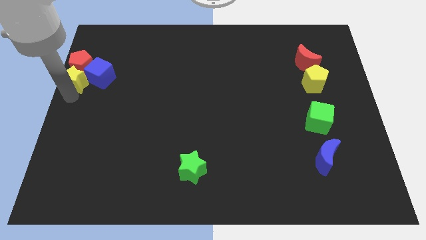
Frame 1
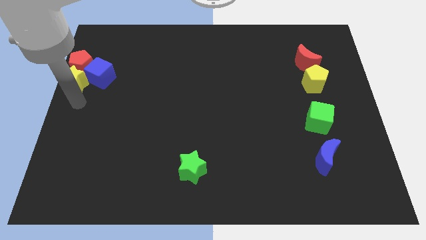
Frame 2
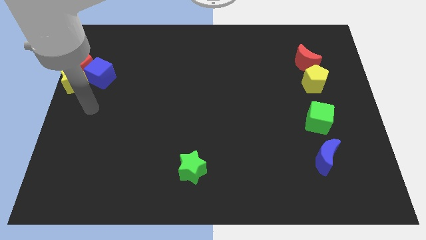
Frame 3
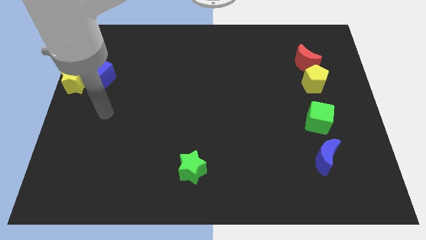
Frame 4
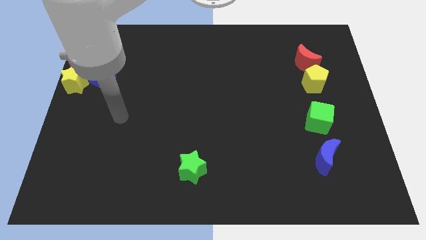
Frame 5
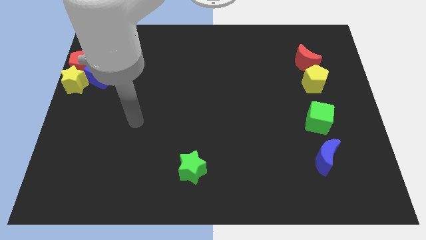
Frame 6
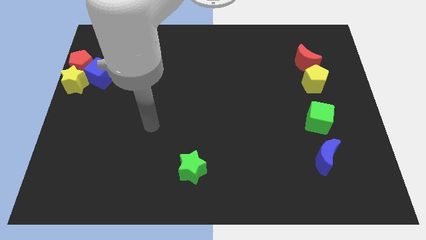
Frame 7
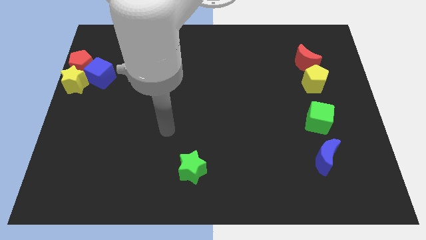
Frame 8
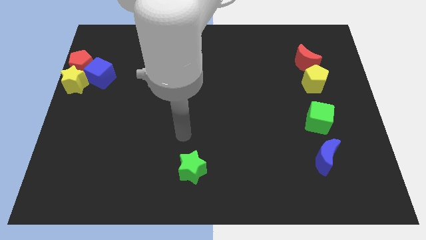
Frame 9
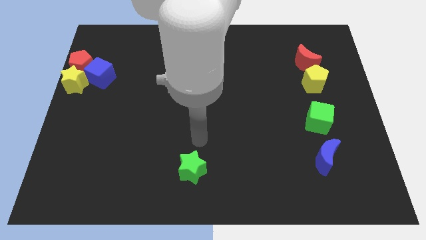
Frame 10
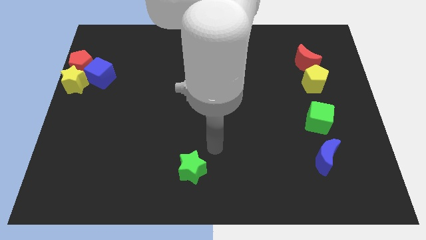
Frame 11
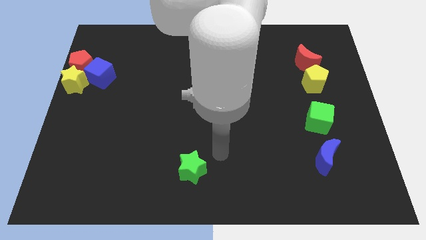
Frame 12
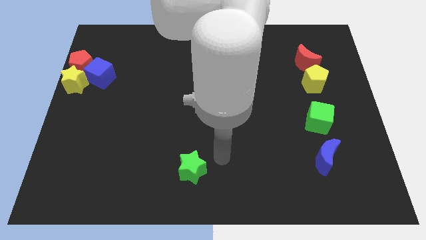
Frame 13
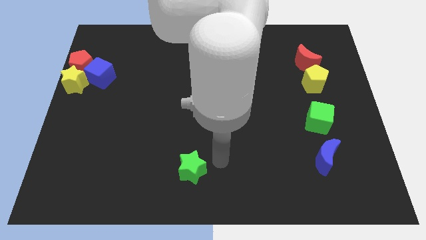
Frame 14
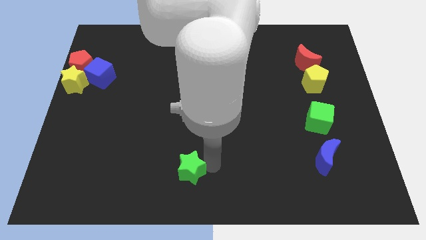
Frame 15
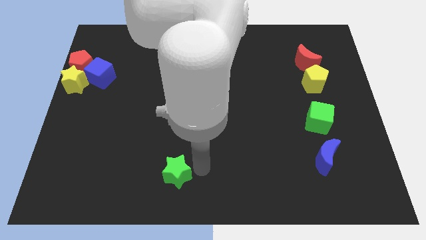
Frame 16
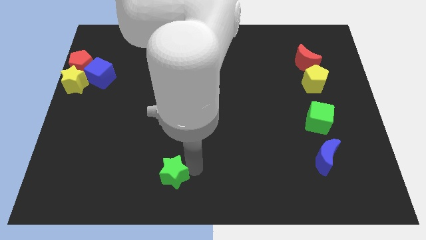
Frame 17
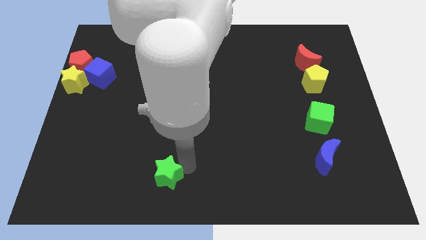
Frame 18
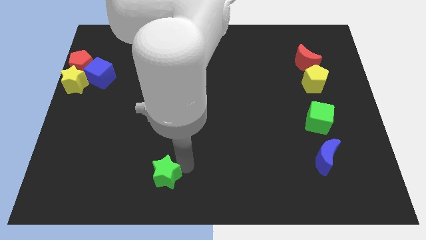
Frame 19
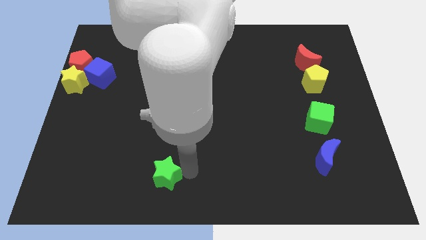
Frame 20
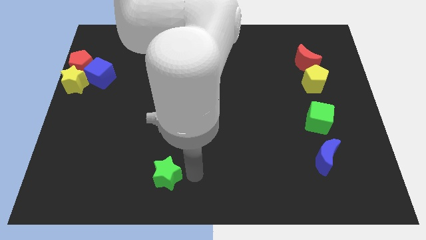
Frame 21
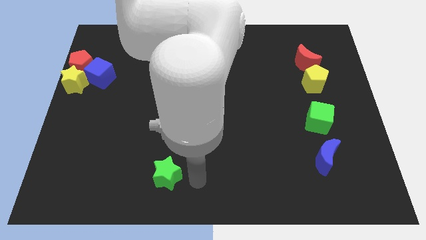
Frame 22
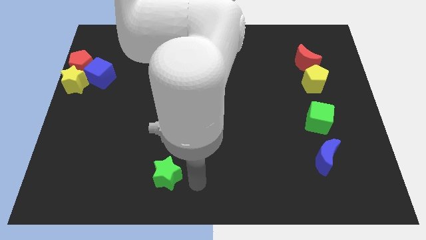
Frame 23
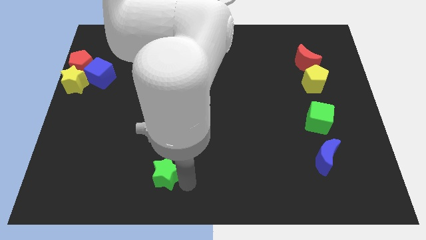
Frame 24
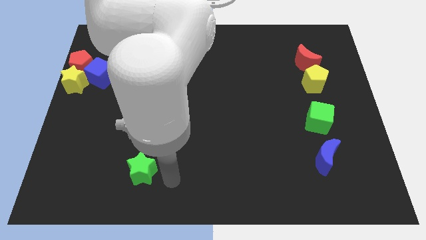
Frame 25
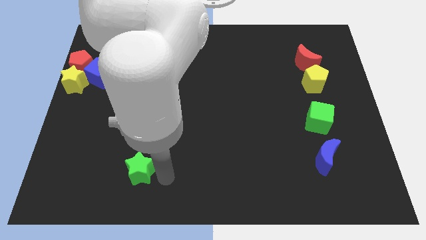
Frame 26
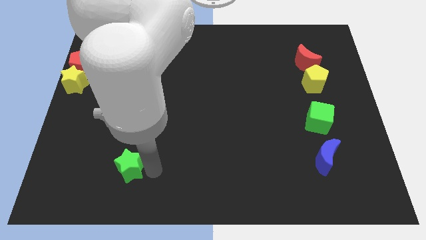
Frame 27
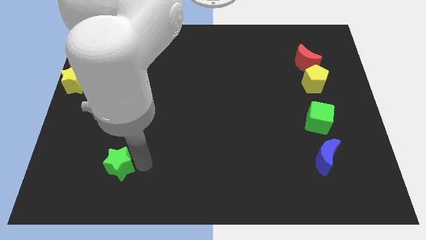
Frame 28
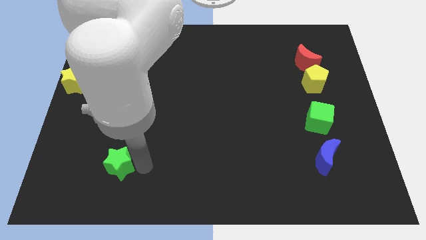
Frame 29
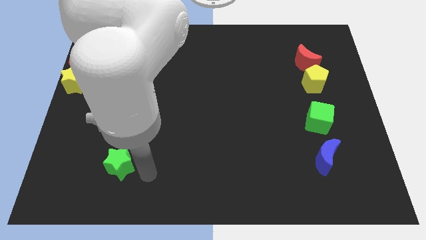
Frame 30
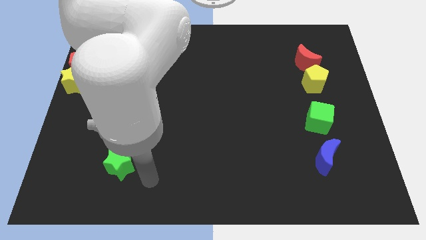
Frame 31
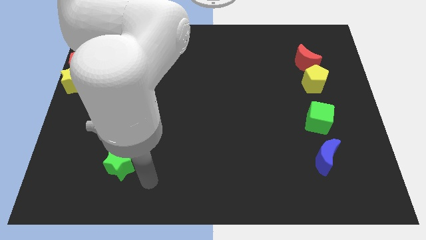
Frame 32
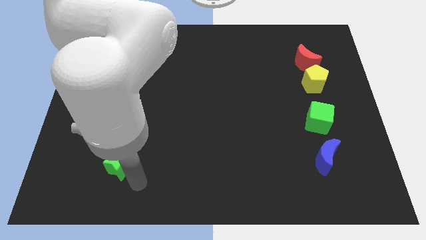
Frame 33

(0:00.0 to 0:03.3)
push the green star slightly towards the left side to the board

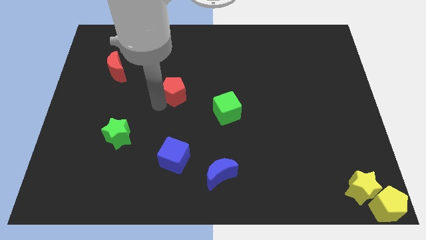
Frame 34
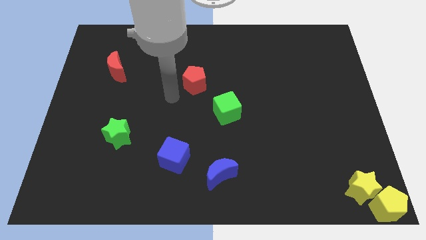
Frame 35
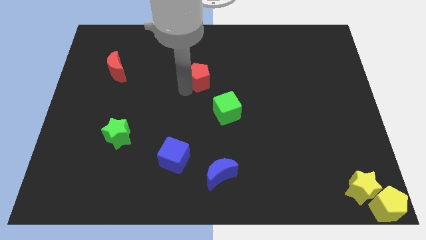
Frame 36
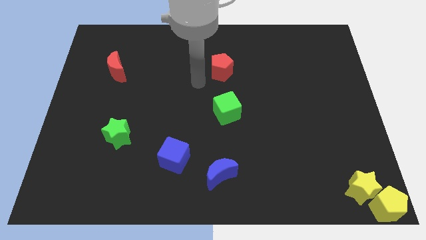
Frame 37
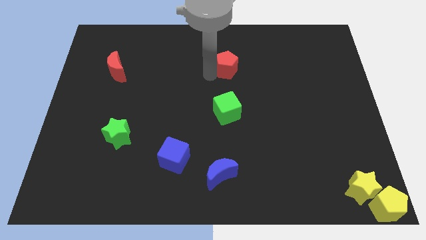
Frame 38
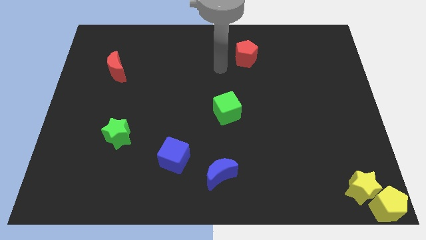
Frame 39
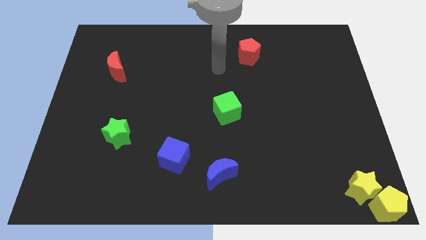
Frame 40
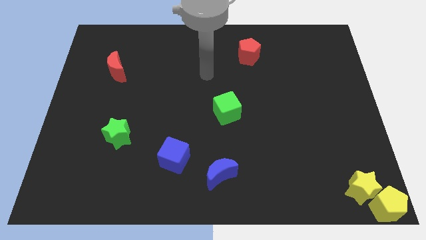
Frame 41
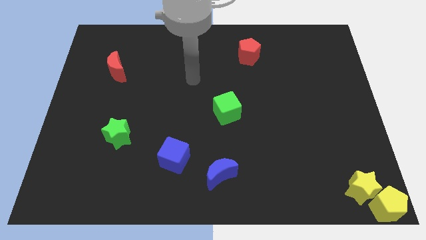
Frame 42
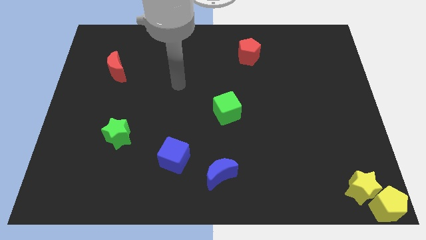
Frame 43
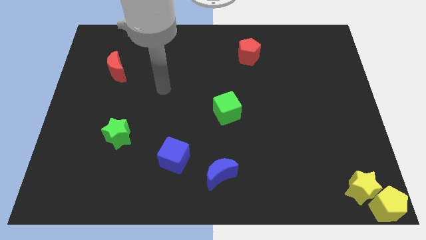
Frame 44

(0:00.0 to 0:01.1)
move the red pentagon towards the top side of the board

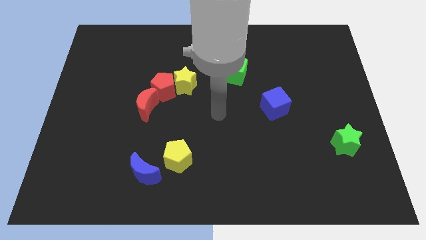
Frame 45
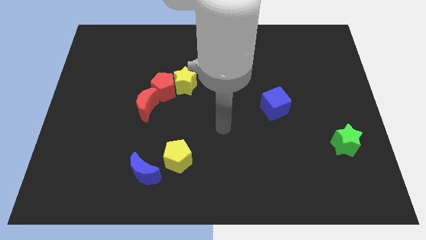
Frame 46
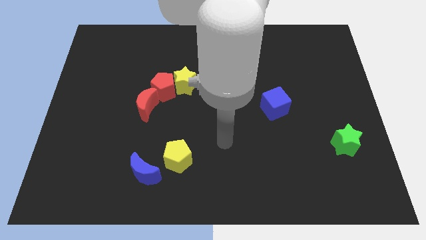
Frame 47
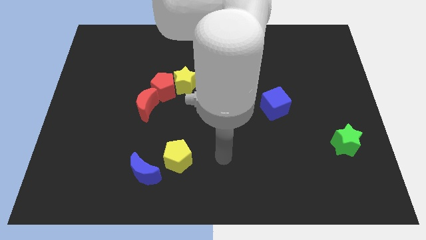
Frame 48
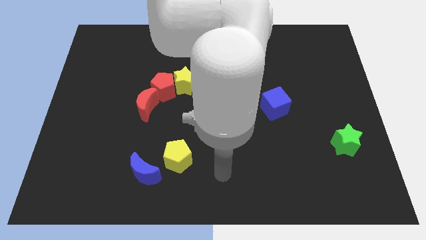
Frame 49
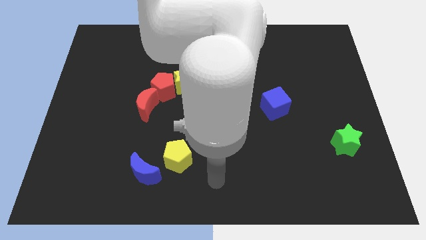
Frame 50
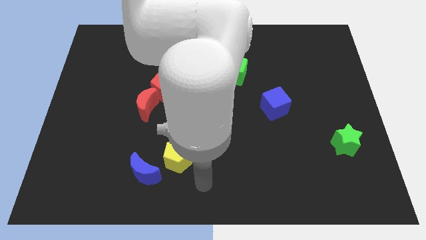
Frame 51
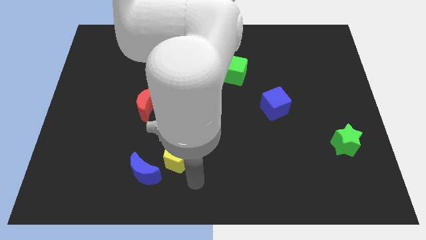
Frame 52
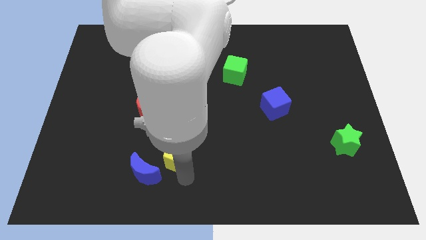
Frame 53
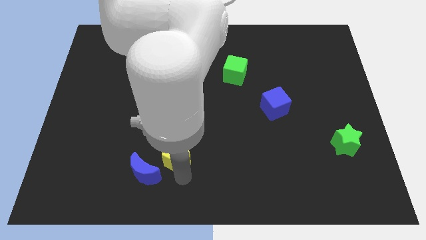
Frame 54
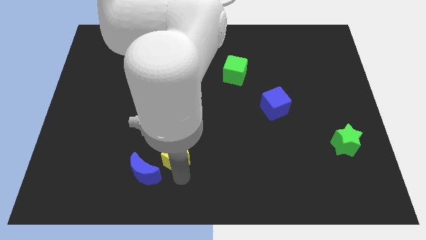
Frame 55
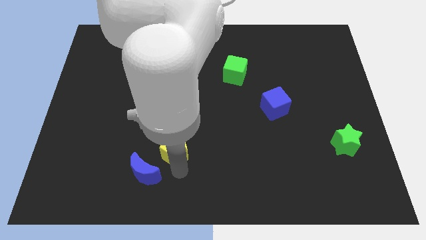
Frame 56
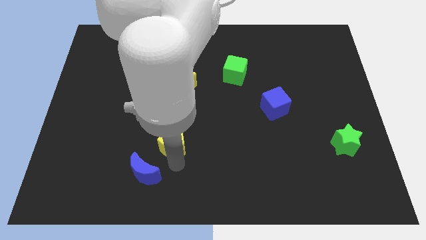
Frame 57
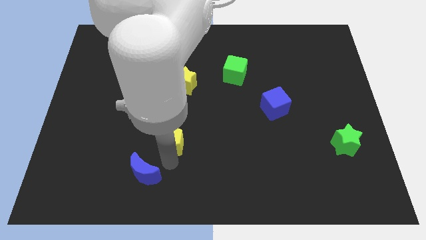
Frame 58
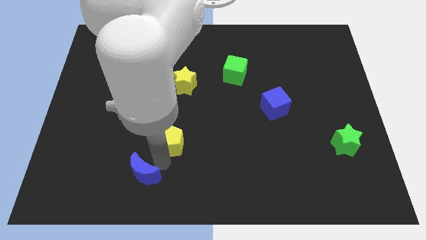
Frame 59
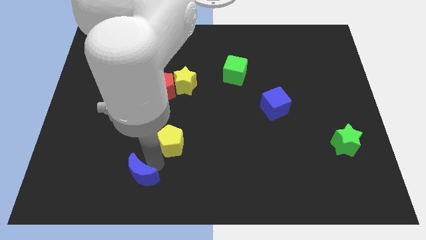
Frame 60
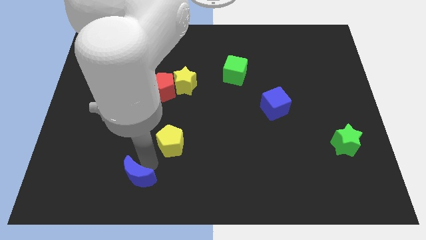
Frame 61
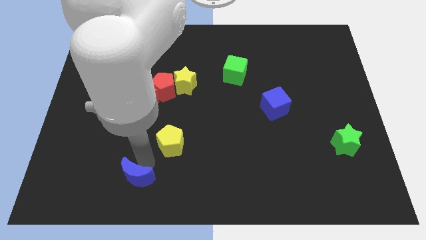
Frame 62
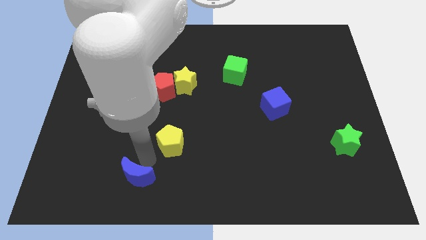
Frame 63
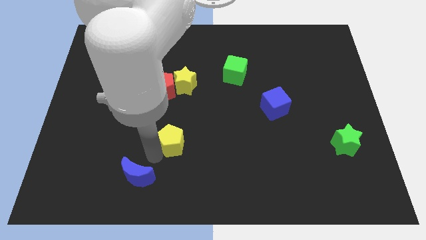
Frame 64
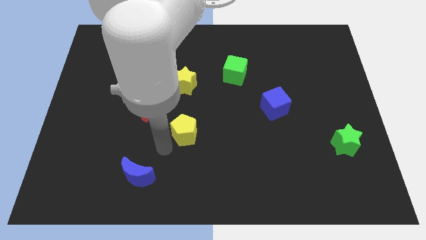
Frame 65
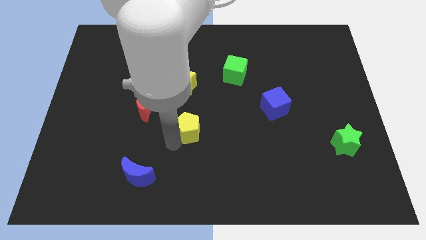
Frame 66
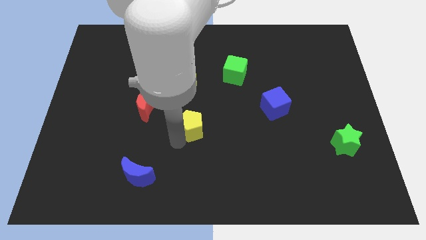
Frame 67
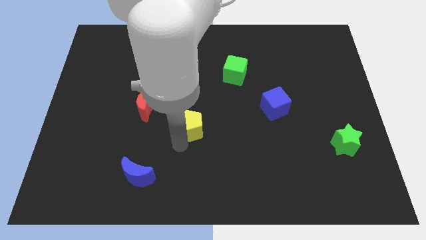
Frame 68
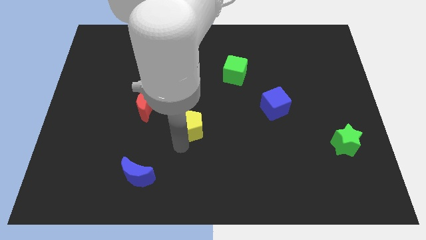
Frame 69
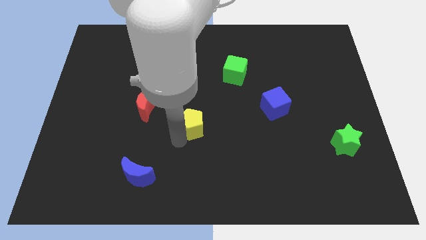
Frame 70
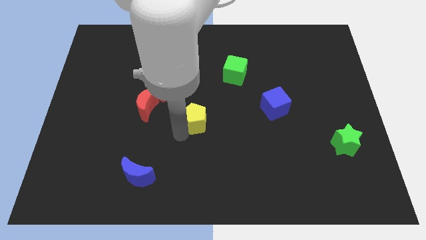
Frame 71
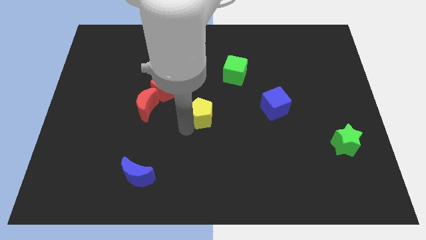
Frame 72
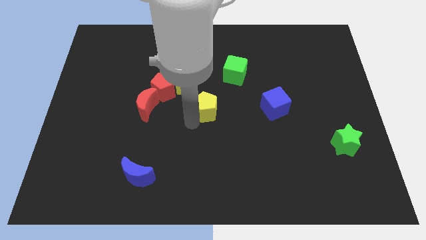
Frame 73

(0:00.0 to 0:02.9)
move the yellow pentagon to the center of the board

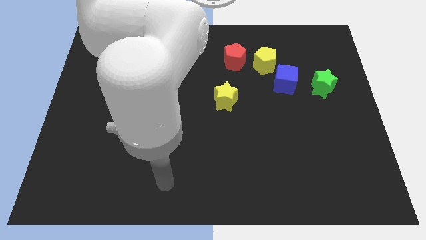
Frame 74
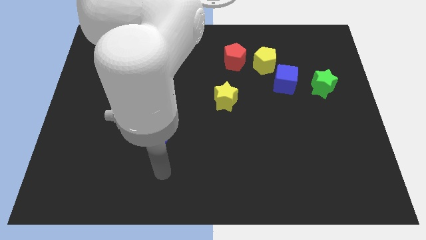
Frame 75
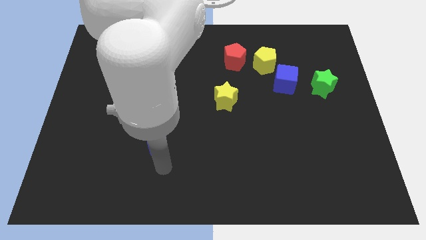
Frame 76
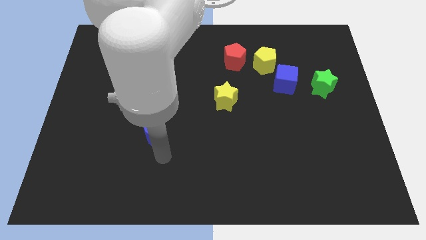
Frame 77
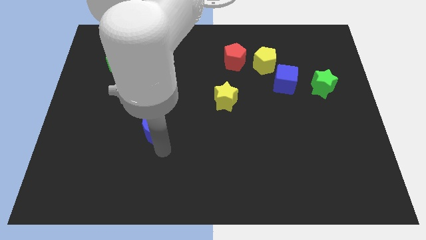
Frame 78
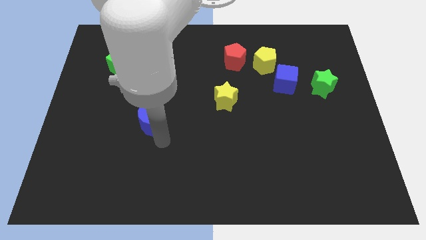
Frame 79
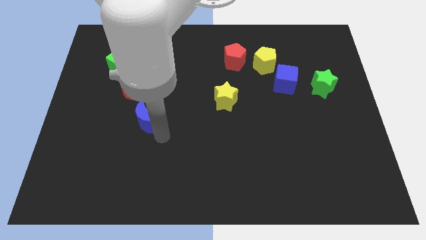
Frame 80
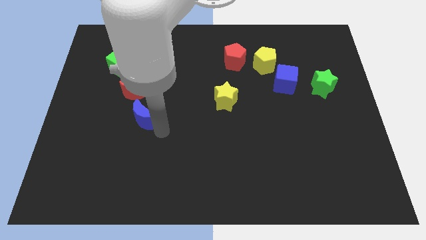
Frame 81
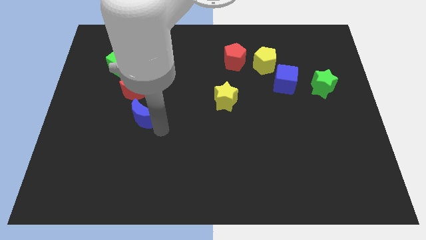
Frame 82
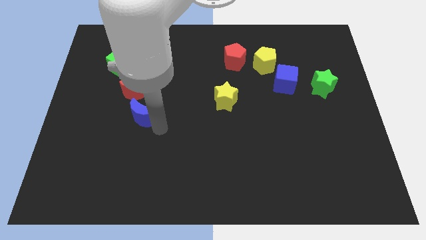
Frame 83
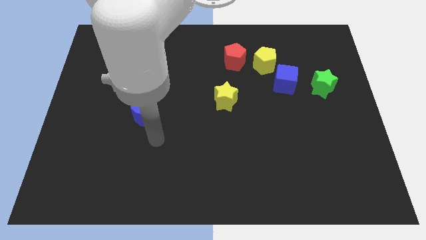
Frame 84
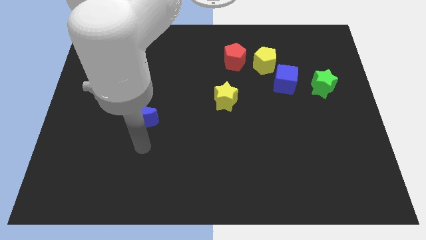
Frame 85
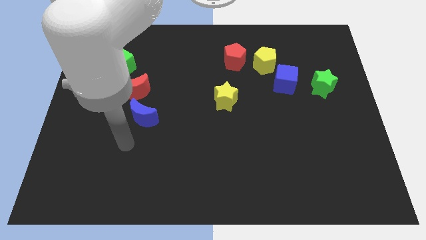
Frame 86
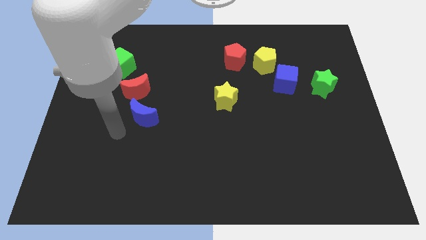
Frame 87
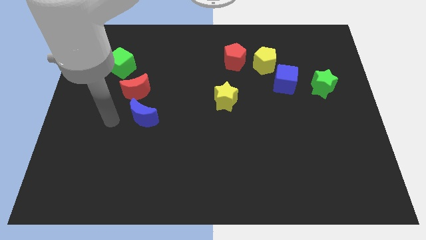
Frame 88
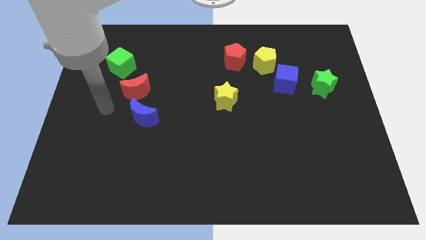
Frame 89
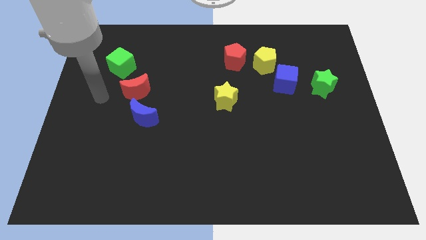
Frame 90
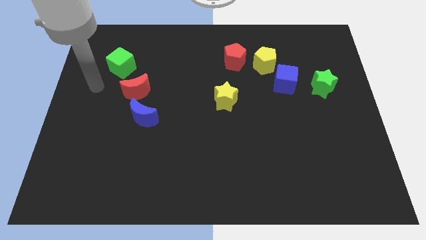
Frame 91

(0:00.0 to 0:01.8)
push the blue crescent below the red crescent
